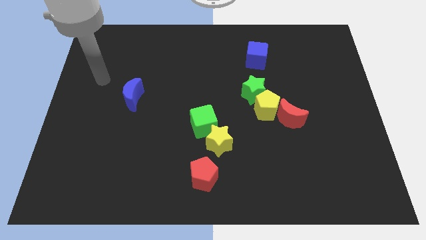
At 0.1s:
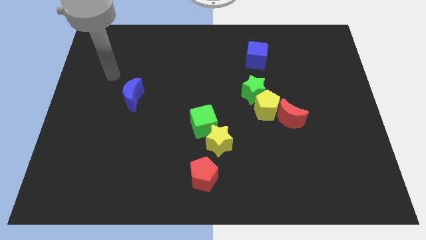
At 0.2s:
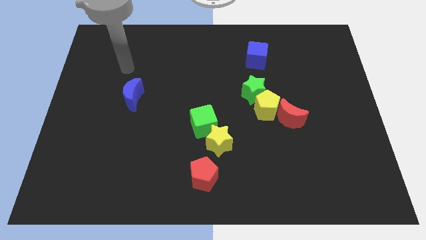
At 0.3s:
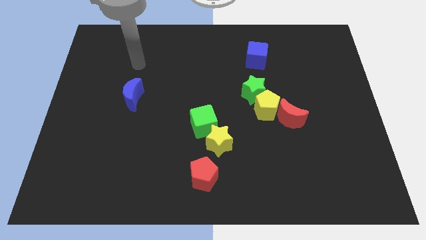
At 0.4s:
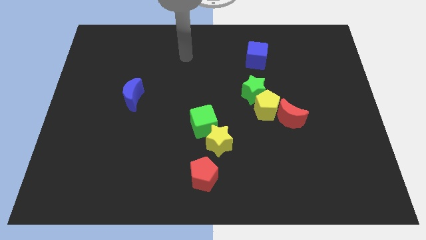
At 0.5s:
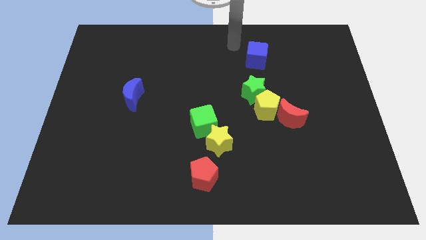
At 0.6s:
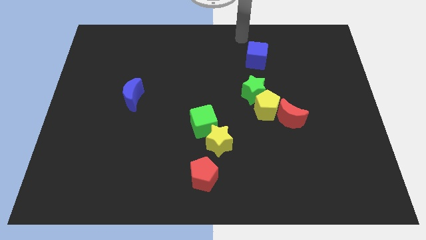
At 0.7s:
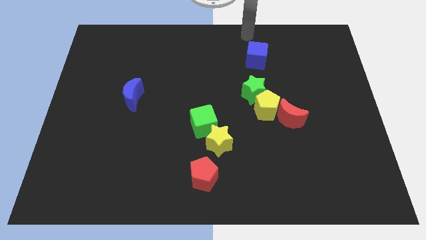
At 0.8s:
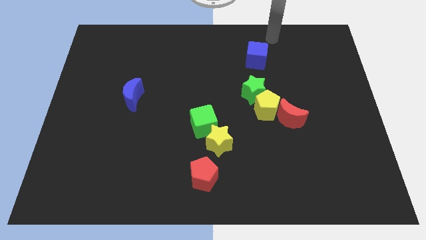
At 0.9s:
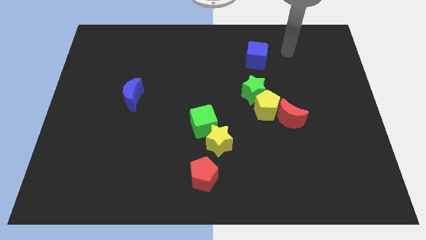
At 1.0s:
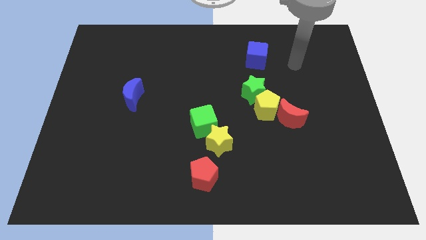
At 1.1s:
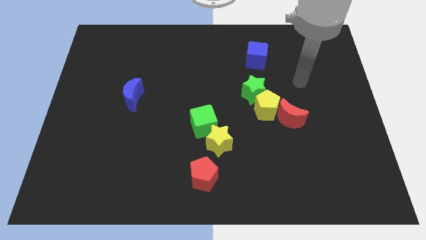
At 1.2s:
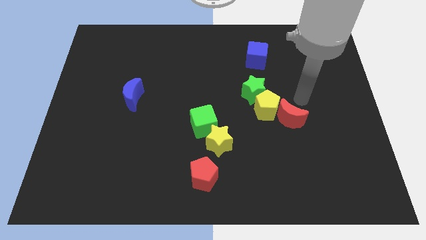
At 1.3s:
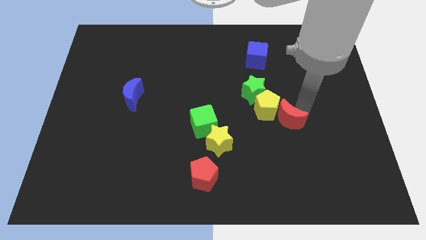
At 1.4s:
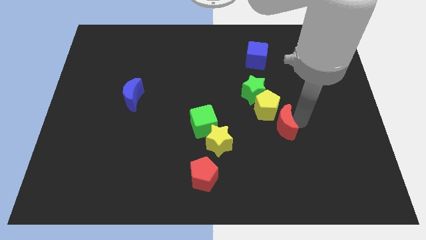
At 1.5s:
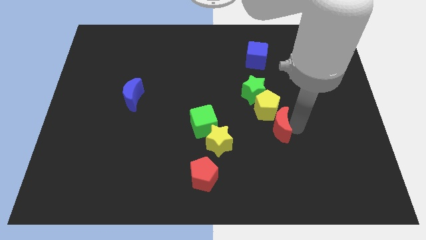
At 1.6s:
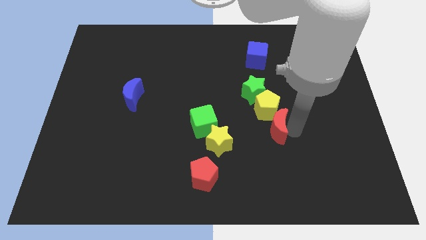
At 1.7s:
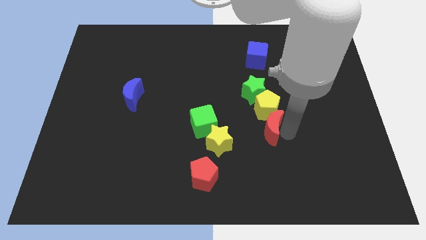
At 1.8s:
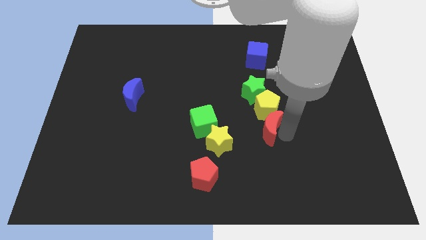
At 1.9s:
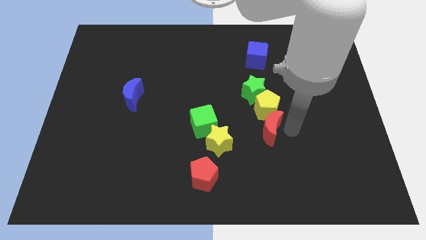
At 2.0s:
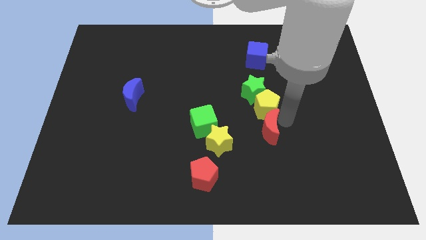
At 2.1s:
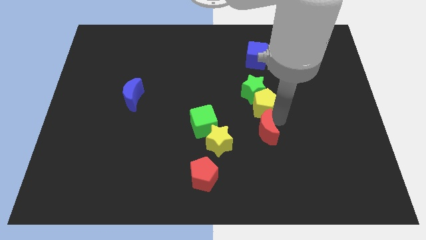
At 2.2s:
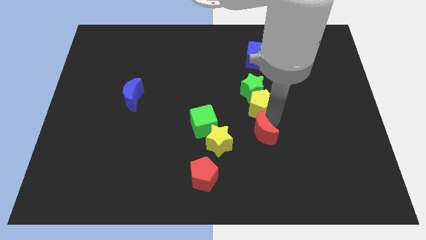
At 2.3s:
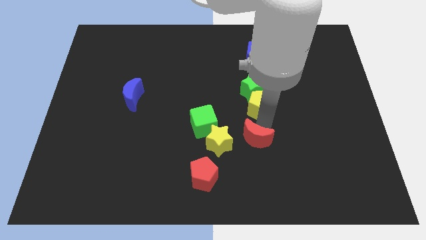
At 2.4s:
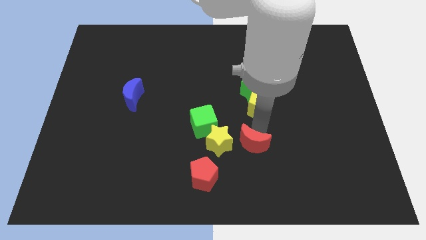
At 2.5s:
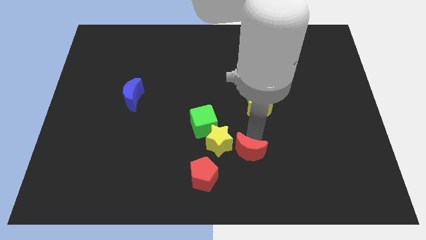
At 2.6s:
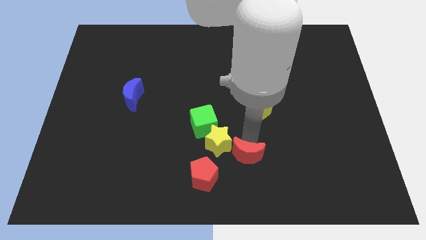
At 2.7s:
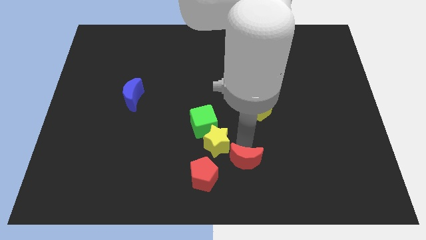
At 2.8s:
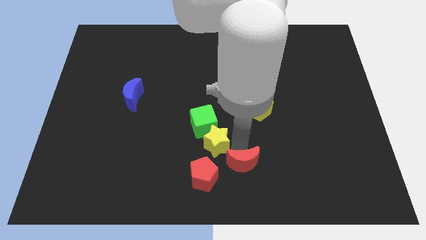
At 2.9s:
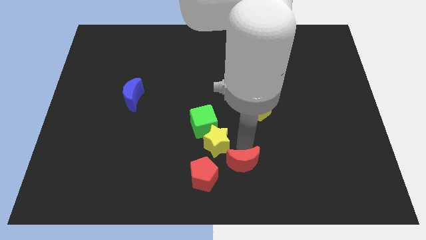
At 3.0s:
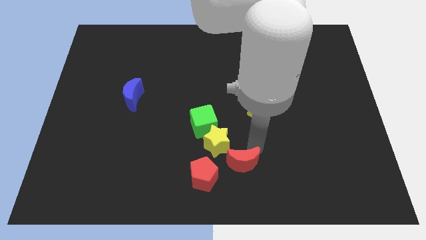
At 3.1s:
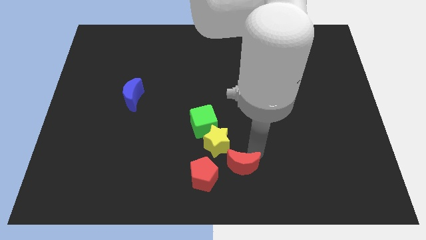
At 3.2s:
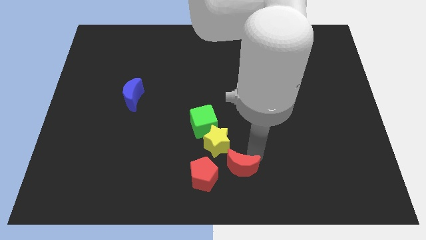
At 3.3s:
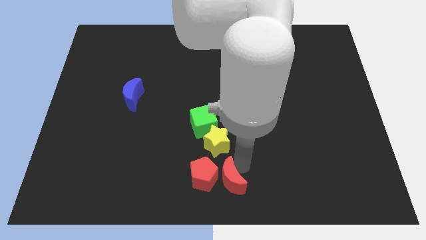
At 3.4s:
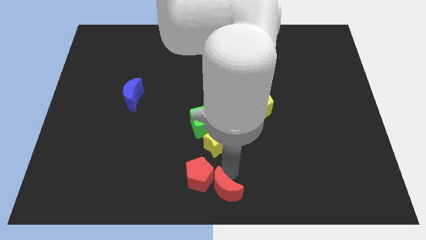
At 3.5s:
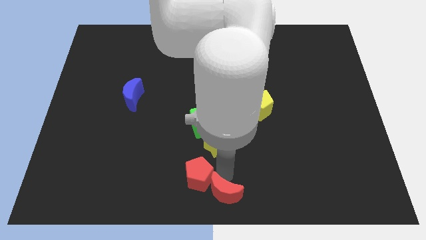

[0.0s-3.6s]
put the red moon next to the red pentagon

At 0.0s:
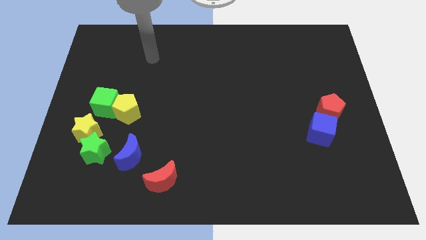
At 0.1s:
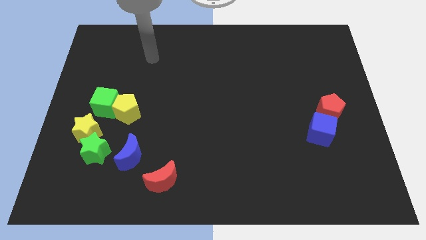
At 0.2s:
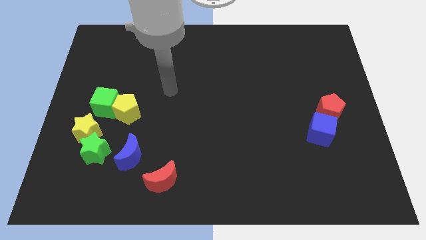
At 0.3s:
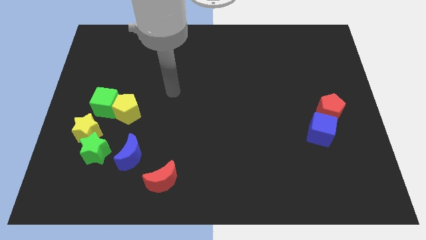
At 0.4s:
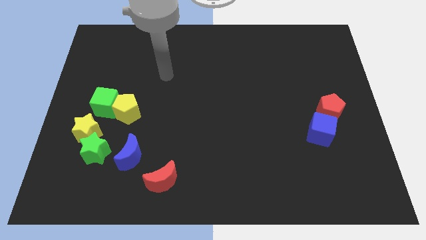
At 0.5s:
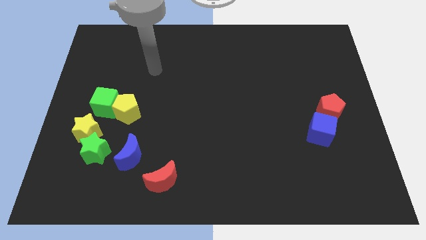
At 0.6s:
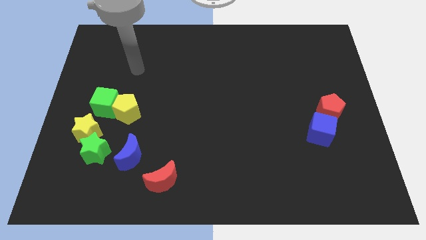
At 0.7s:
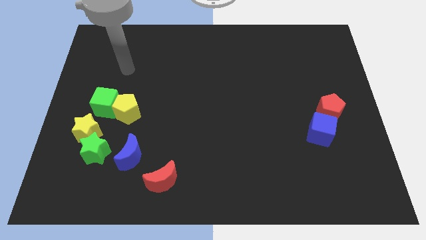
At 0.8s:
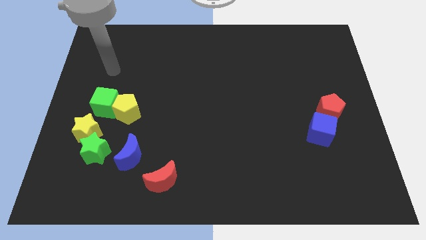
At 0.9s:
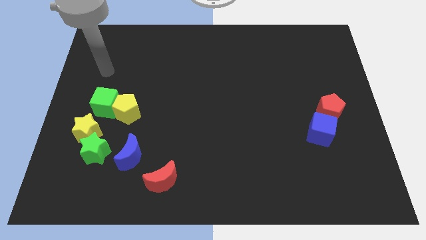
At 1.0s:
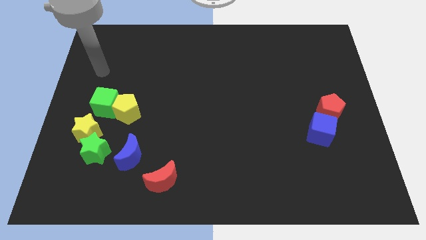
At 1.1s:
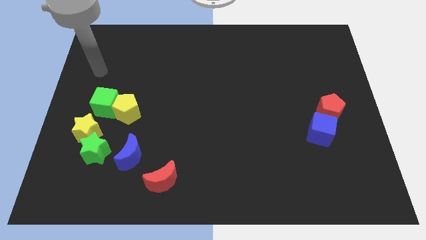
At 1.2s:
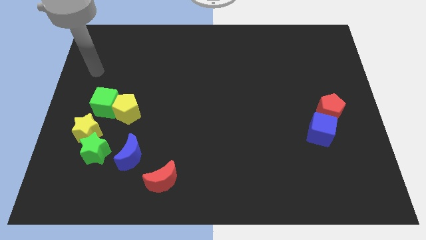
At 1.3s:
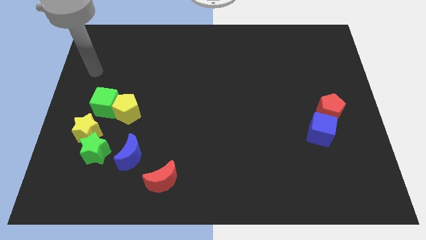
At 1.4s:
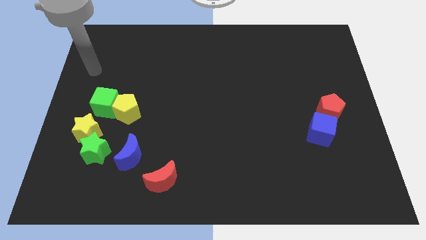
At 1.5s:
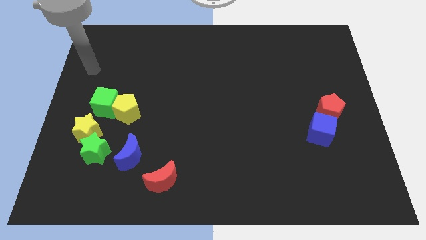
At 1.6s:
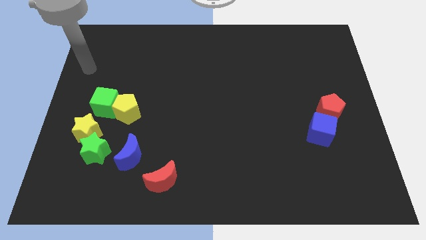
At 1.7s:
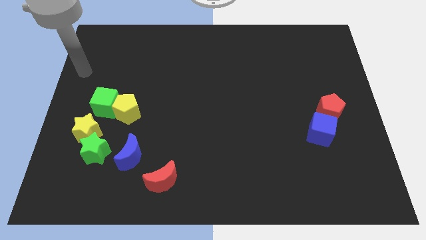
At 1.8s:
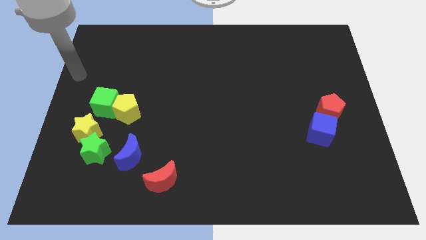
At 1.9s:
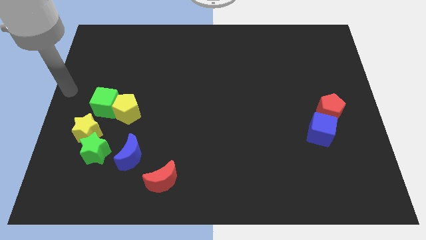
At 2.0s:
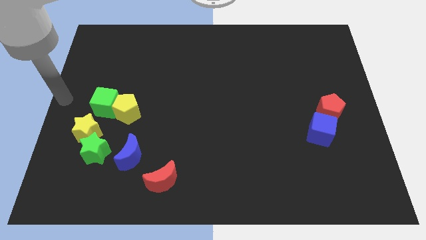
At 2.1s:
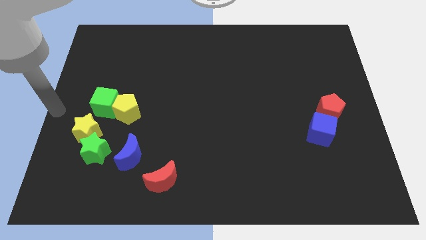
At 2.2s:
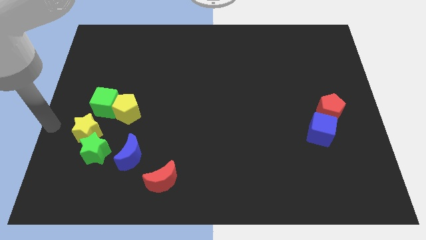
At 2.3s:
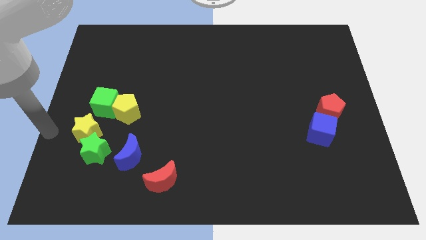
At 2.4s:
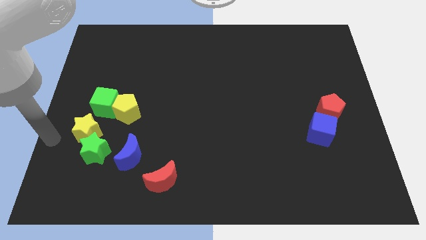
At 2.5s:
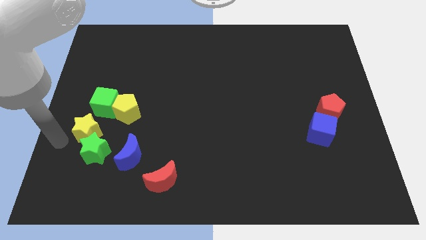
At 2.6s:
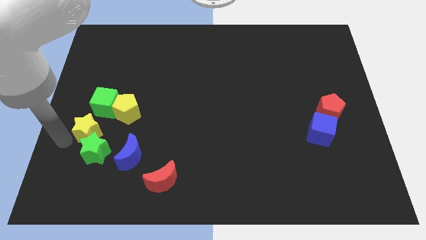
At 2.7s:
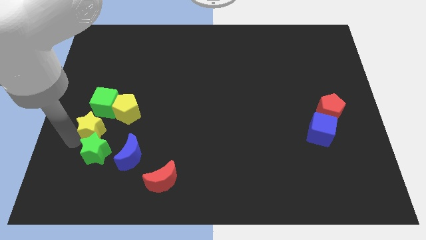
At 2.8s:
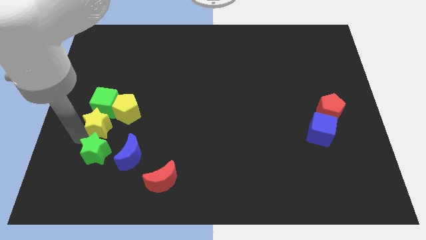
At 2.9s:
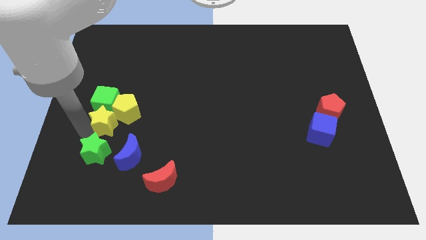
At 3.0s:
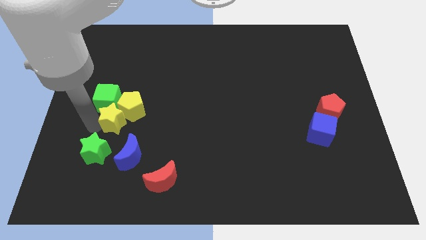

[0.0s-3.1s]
move the yellow star next to the green cube

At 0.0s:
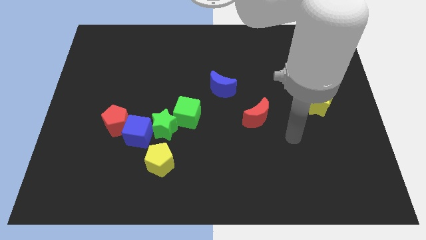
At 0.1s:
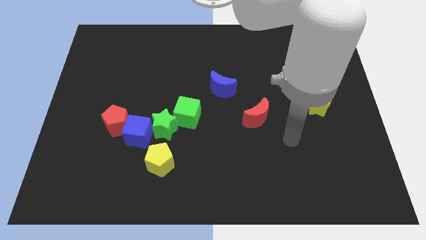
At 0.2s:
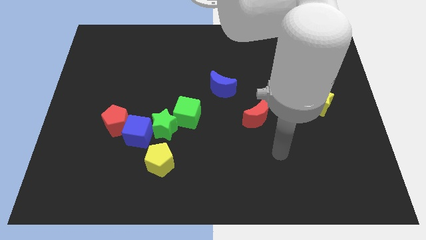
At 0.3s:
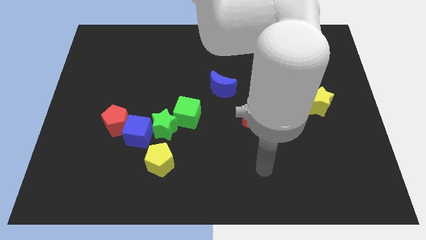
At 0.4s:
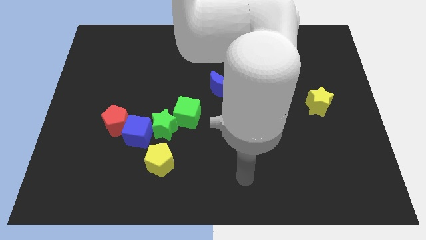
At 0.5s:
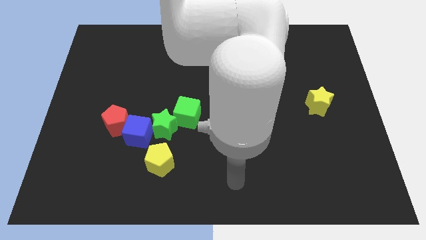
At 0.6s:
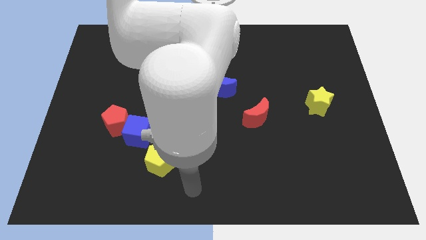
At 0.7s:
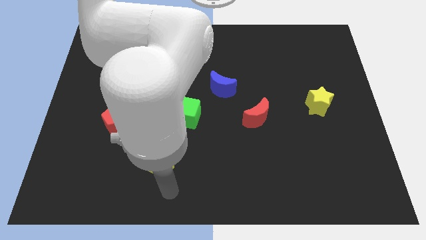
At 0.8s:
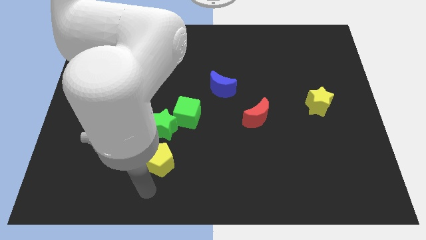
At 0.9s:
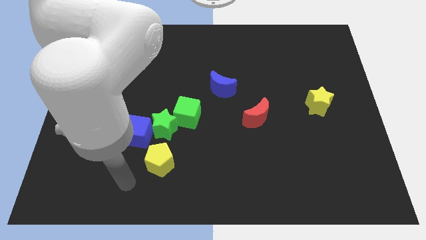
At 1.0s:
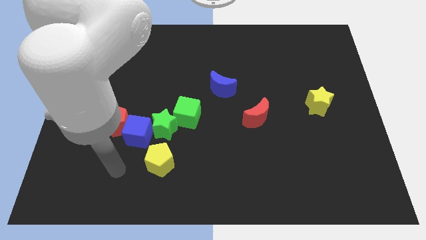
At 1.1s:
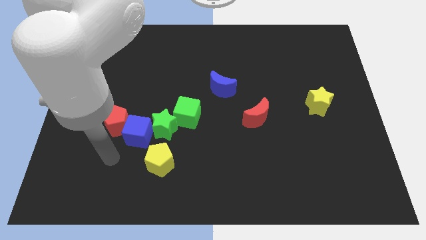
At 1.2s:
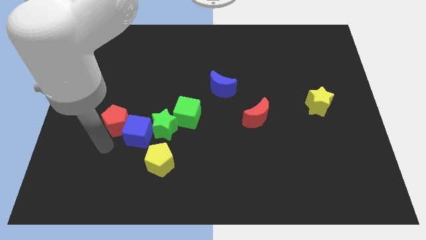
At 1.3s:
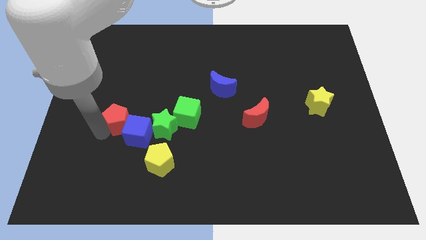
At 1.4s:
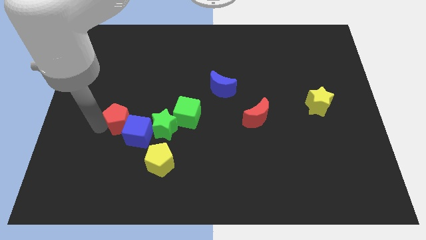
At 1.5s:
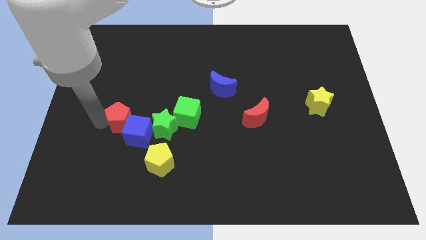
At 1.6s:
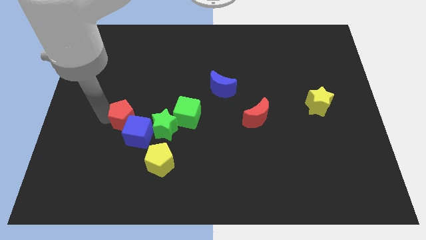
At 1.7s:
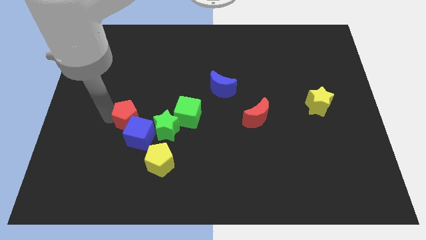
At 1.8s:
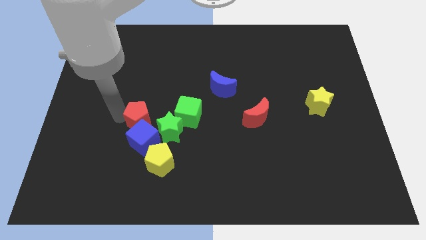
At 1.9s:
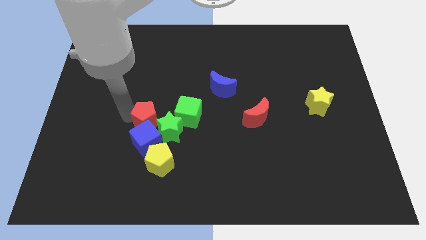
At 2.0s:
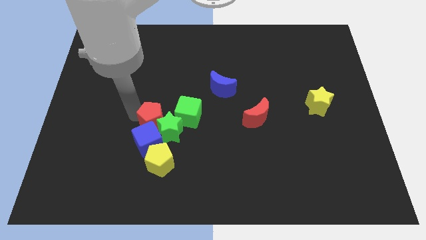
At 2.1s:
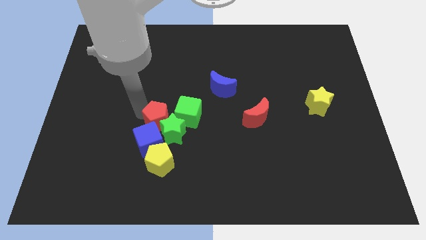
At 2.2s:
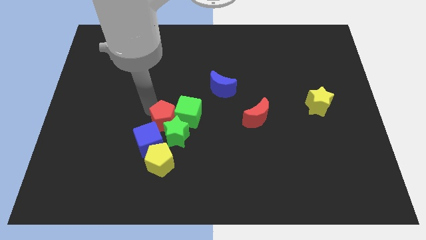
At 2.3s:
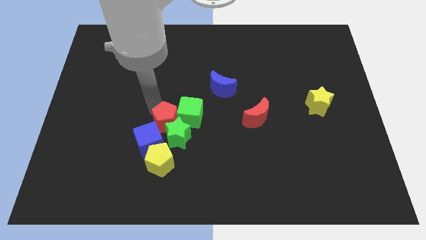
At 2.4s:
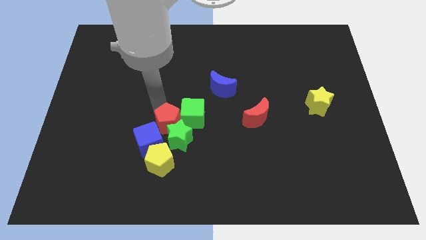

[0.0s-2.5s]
slide the red pentagon to the green cube
